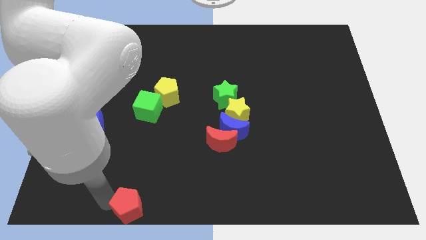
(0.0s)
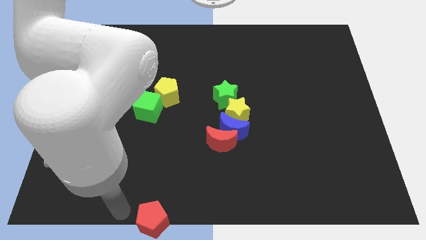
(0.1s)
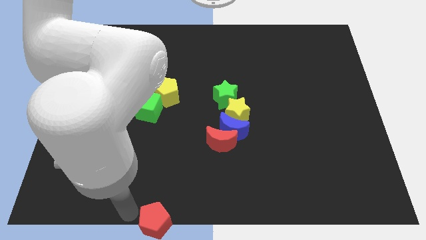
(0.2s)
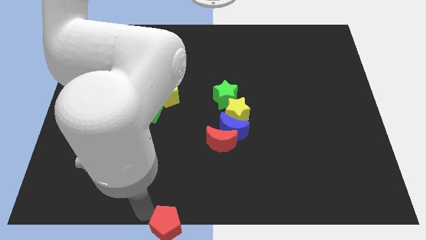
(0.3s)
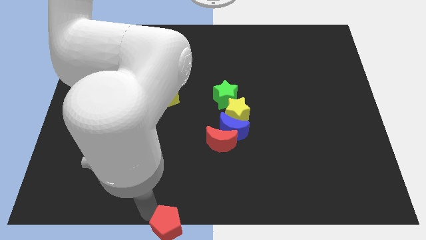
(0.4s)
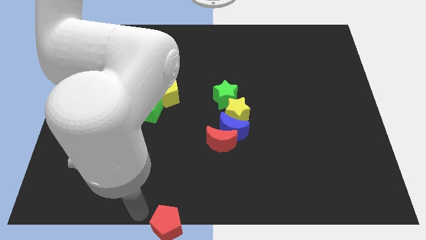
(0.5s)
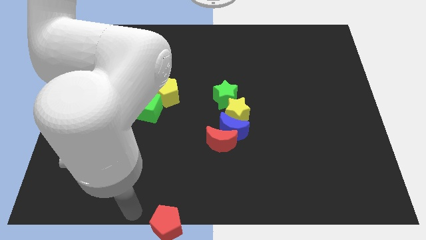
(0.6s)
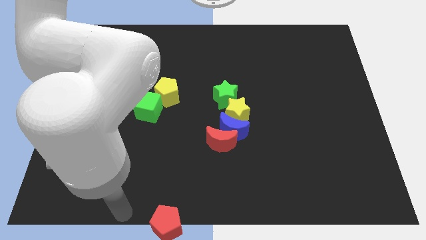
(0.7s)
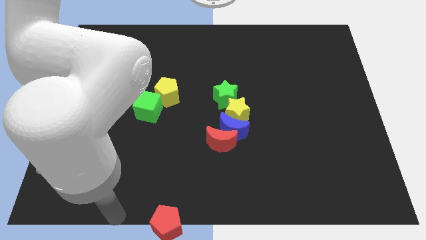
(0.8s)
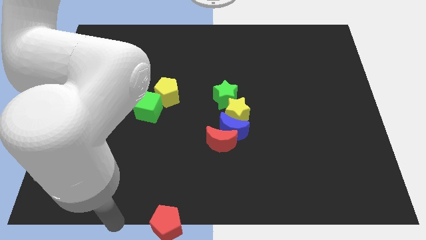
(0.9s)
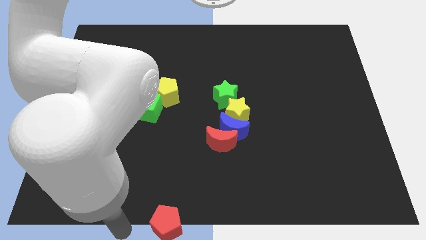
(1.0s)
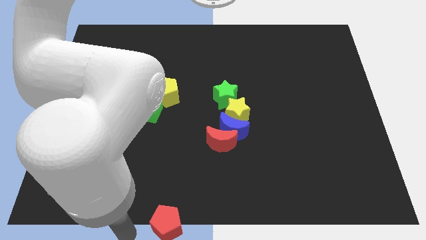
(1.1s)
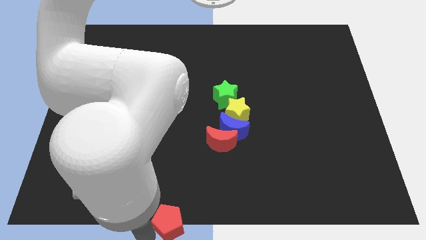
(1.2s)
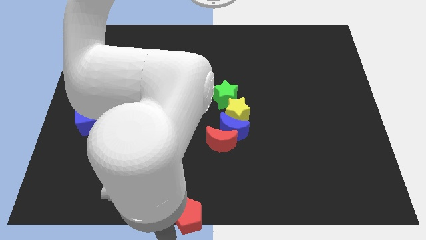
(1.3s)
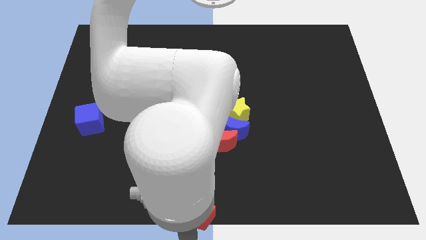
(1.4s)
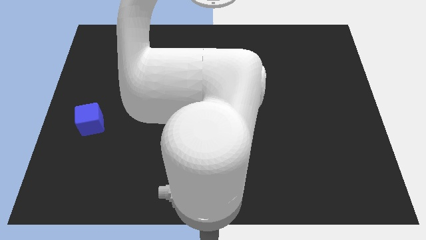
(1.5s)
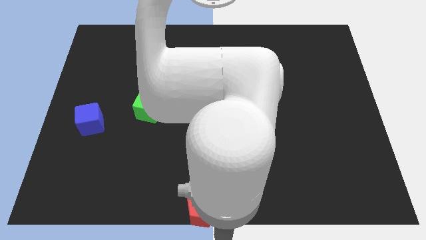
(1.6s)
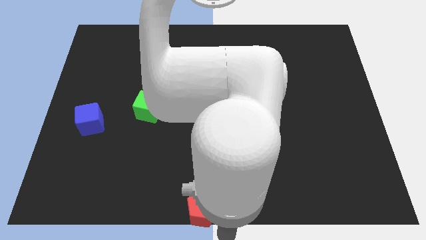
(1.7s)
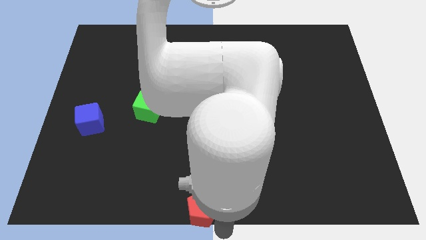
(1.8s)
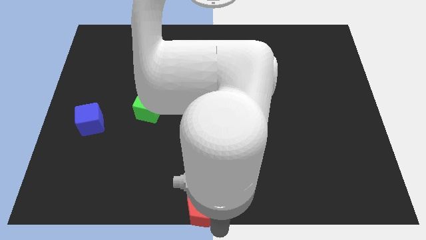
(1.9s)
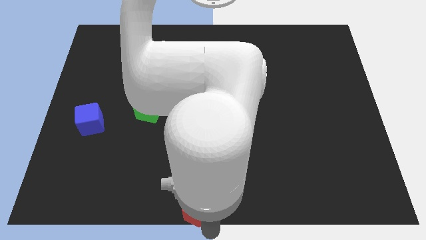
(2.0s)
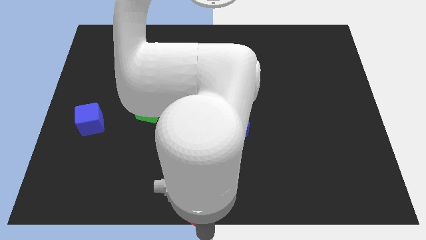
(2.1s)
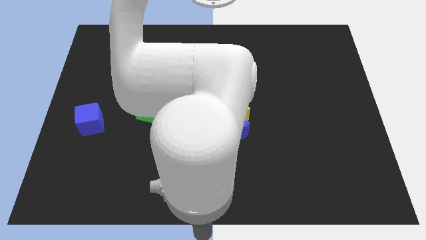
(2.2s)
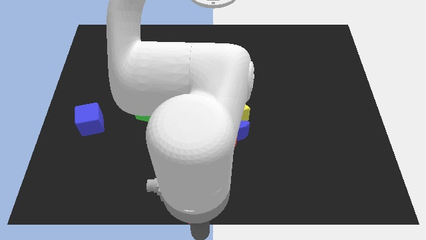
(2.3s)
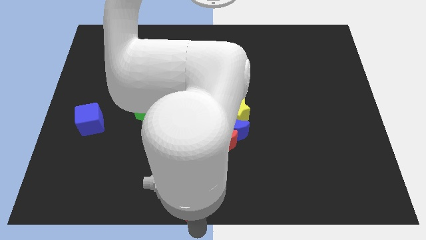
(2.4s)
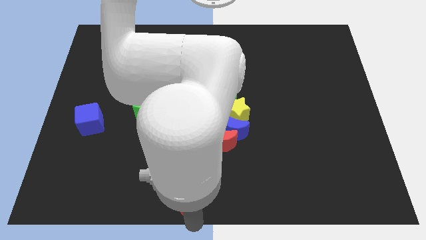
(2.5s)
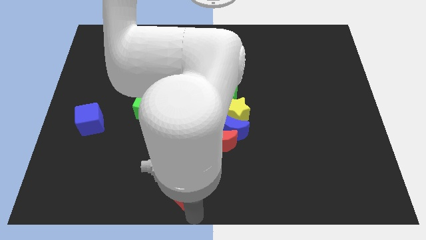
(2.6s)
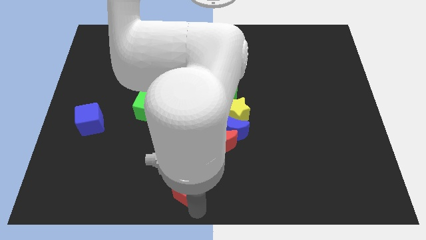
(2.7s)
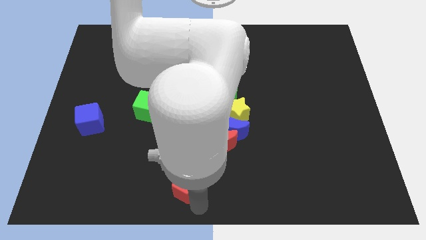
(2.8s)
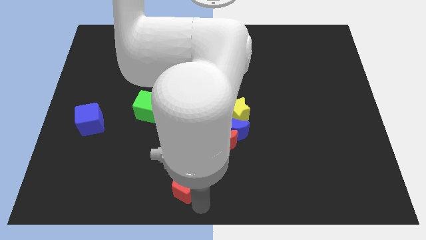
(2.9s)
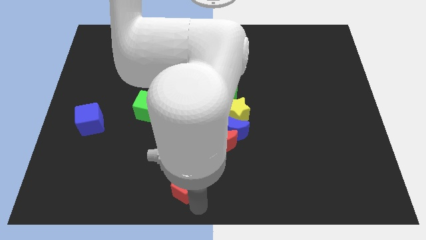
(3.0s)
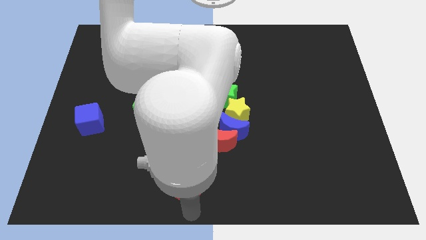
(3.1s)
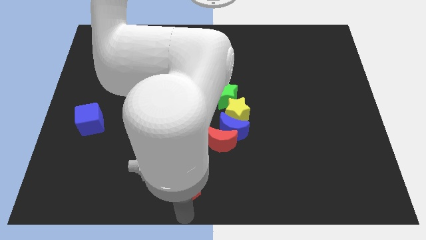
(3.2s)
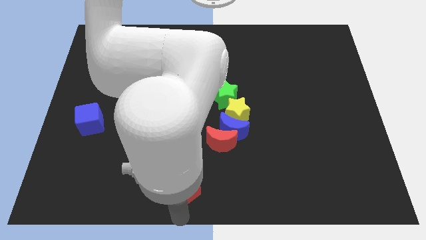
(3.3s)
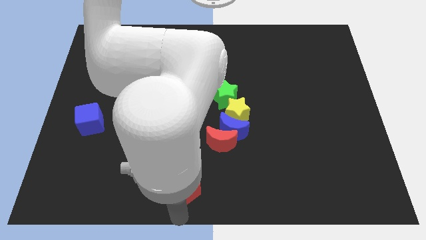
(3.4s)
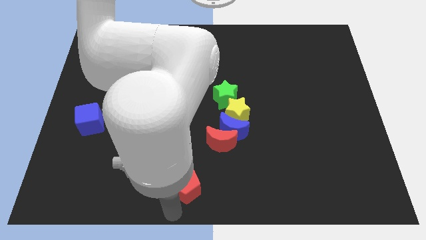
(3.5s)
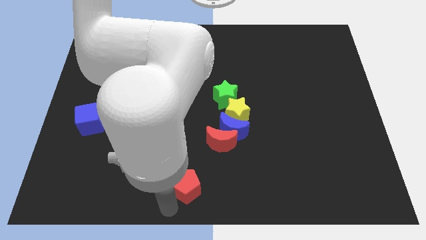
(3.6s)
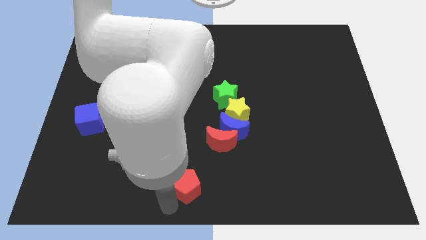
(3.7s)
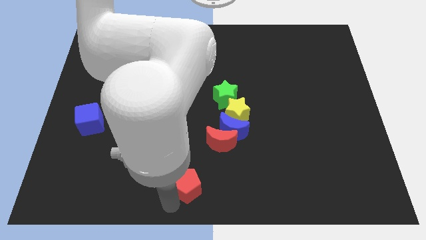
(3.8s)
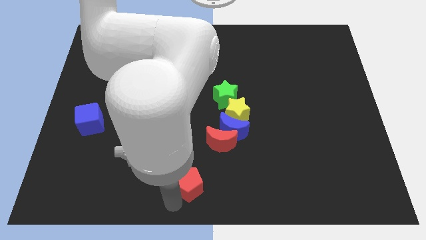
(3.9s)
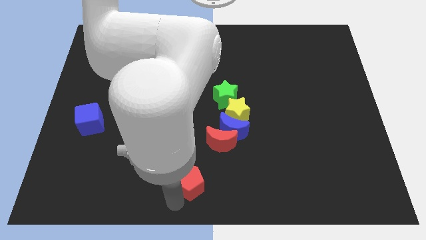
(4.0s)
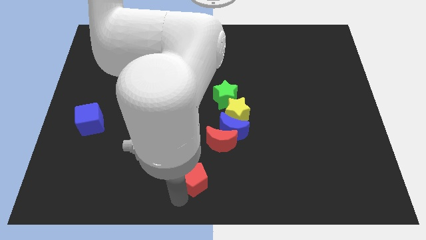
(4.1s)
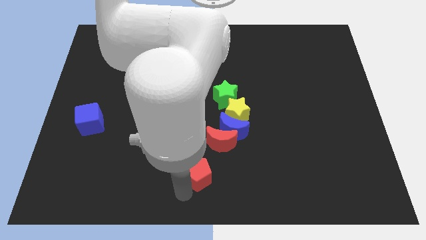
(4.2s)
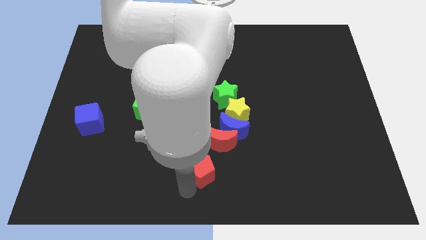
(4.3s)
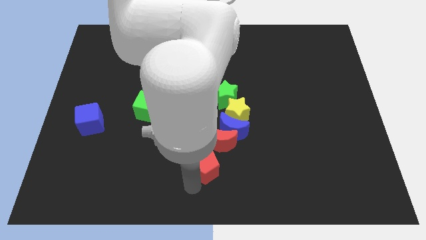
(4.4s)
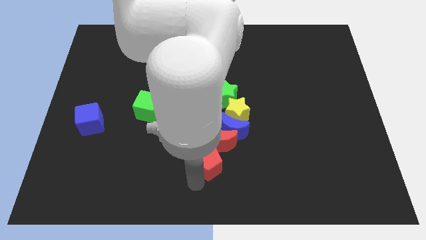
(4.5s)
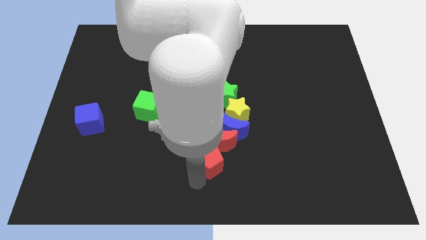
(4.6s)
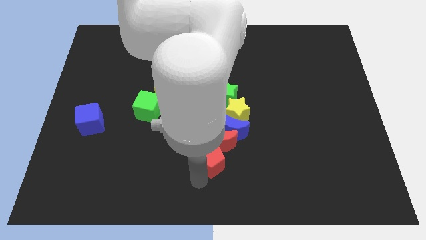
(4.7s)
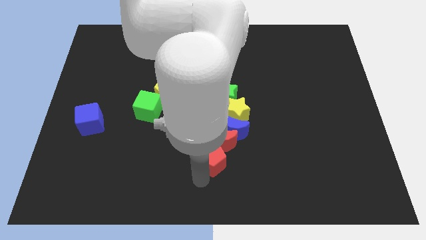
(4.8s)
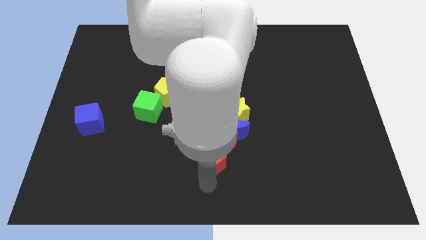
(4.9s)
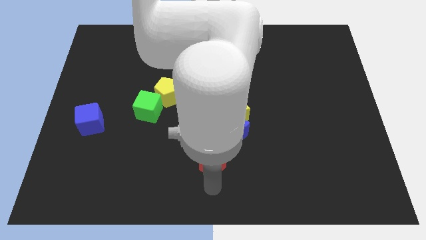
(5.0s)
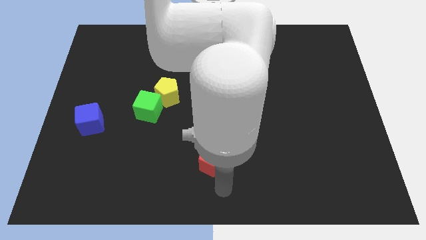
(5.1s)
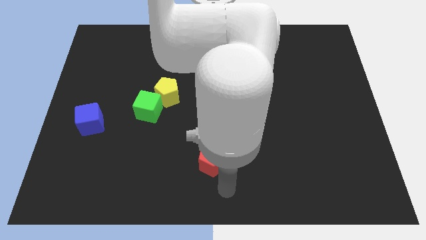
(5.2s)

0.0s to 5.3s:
place the red pentagon below the red moon

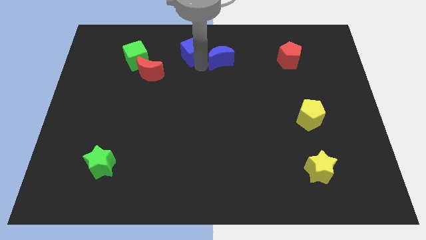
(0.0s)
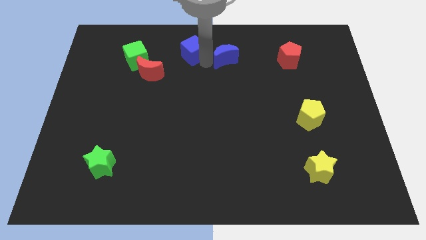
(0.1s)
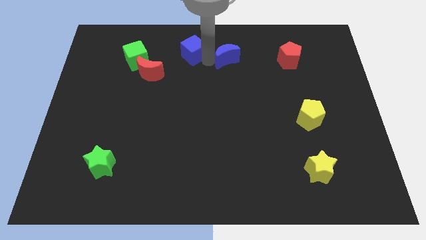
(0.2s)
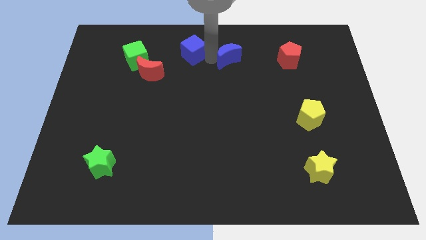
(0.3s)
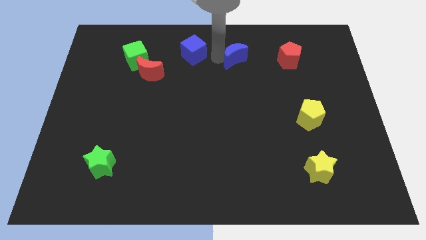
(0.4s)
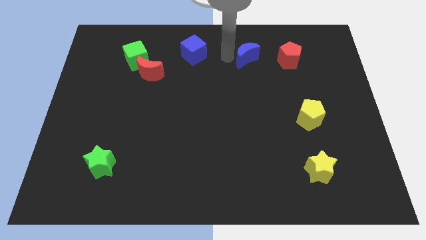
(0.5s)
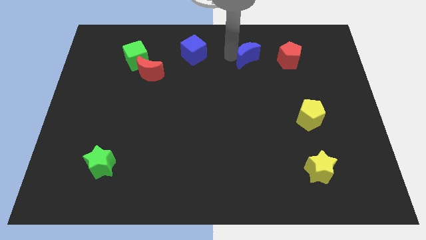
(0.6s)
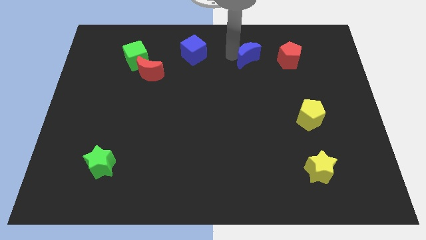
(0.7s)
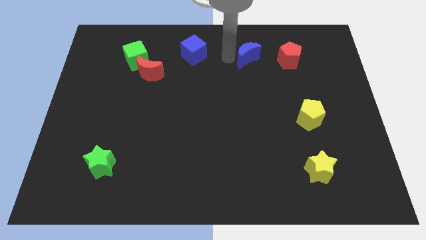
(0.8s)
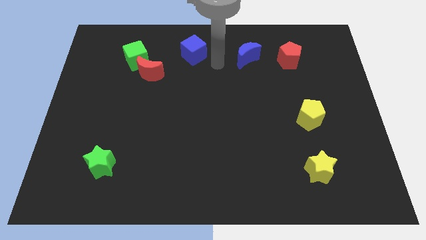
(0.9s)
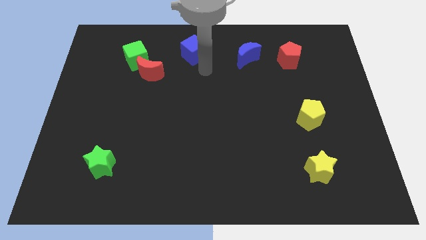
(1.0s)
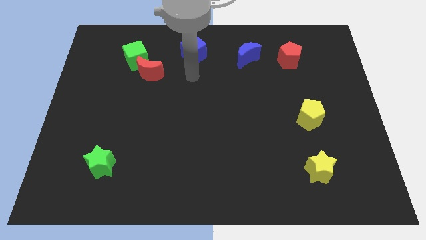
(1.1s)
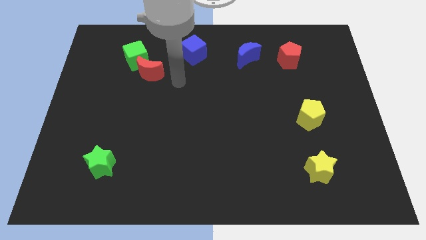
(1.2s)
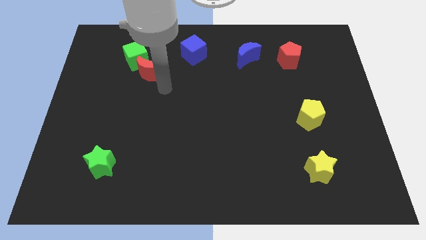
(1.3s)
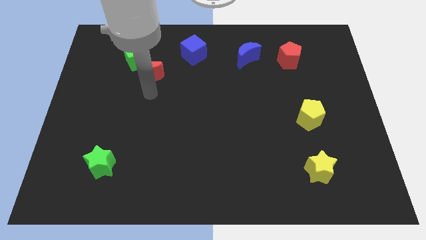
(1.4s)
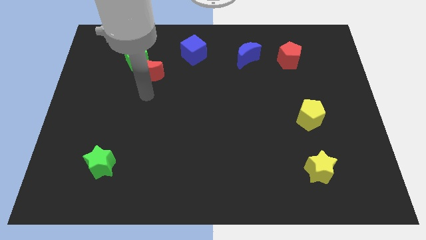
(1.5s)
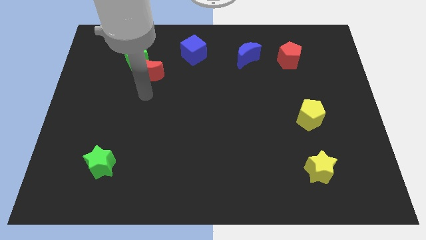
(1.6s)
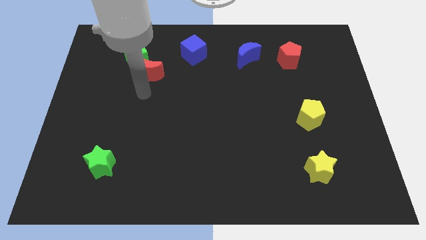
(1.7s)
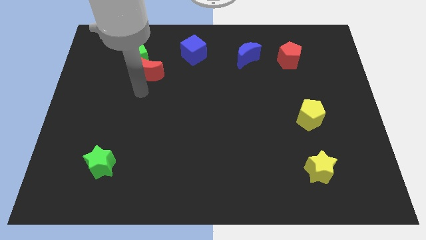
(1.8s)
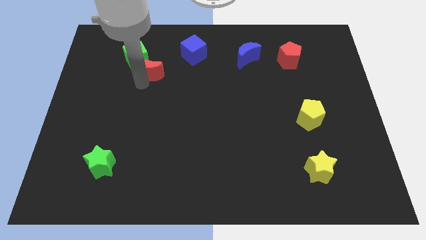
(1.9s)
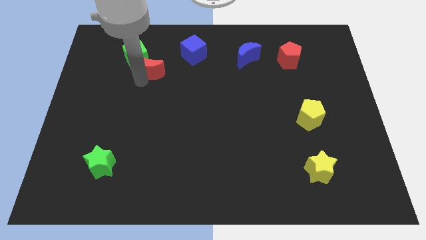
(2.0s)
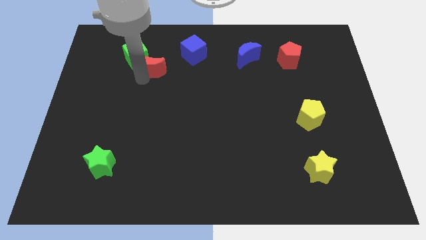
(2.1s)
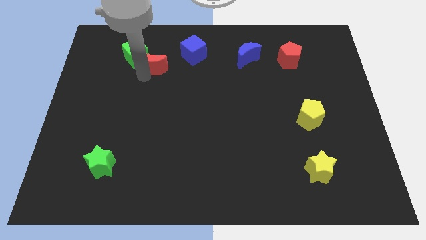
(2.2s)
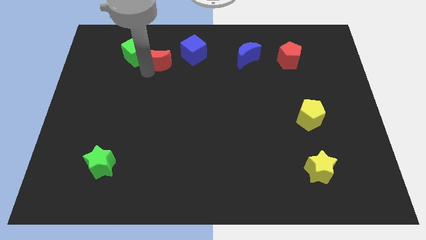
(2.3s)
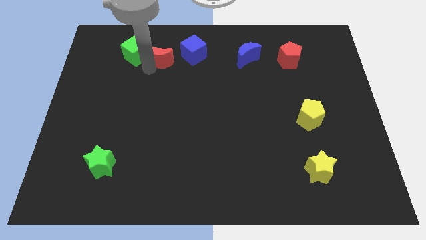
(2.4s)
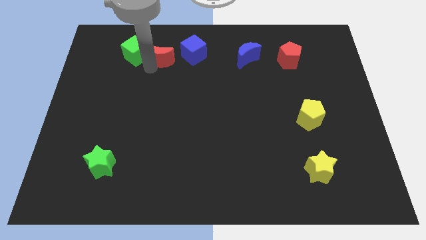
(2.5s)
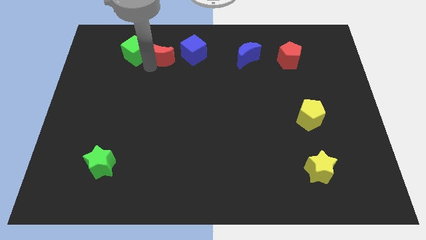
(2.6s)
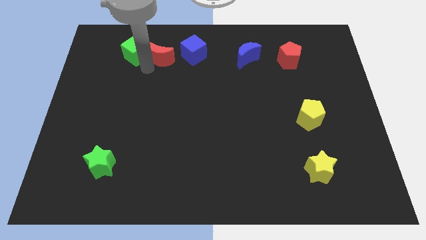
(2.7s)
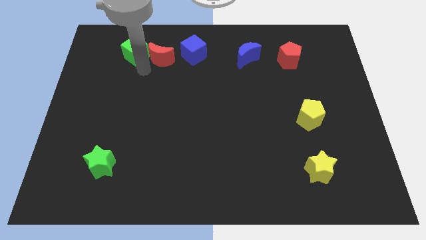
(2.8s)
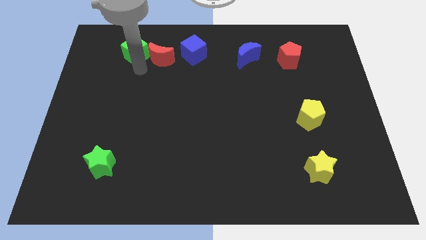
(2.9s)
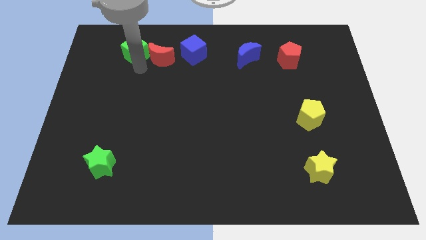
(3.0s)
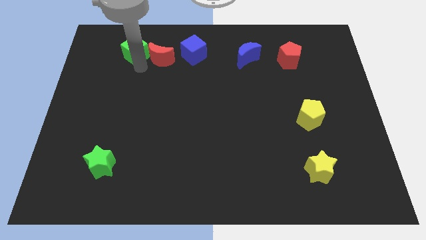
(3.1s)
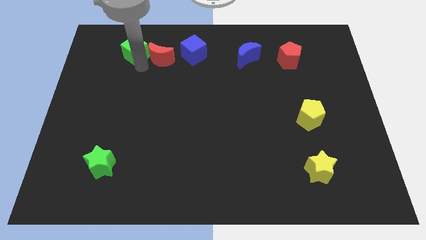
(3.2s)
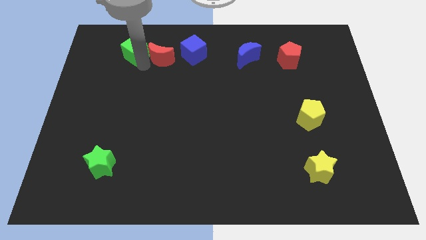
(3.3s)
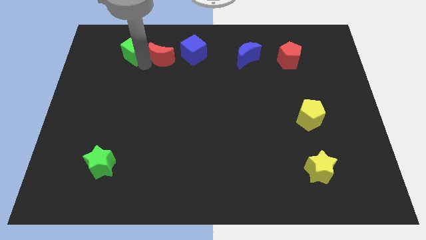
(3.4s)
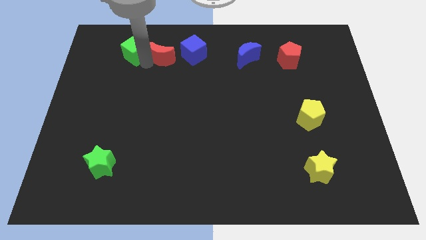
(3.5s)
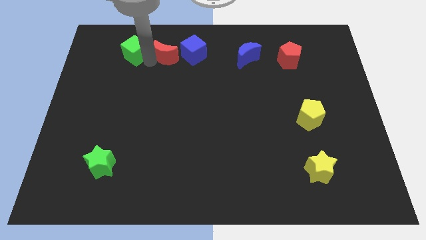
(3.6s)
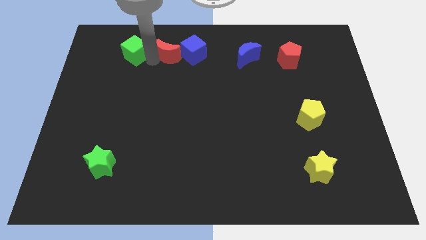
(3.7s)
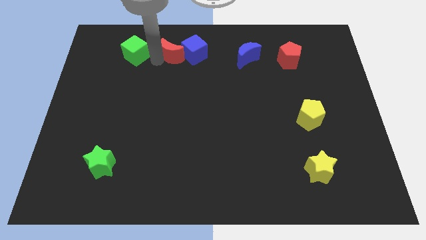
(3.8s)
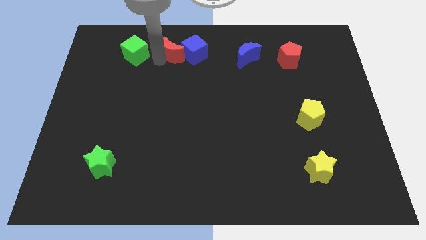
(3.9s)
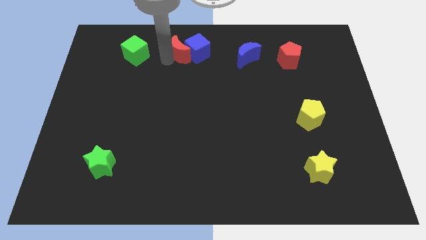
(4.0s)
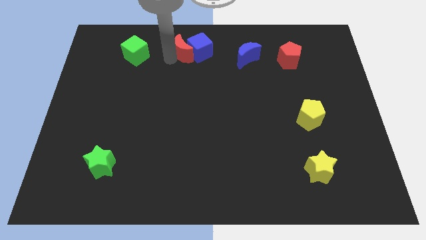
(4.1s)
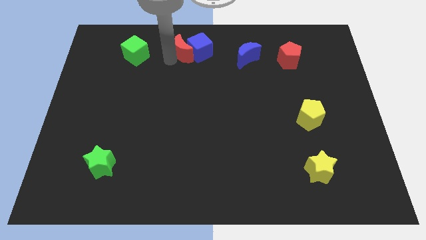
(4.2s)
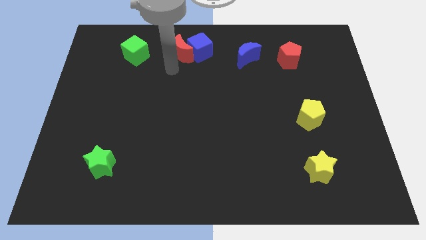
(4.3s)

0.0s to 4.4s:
push the red crescent and blue cube in between the blue moon and green cube
